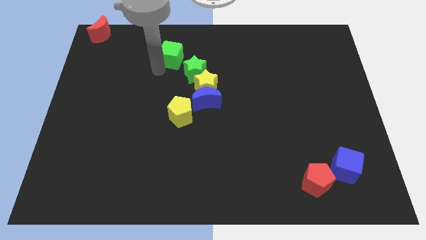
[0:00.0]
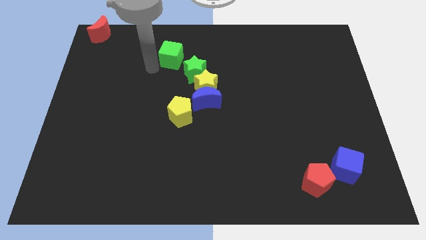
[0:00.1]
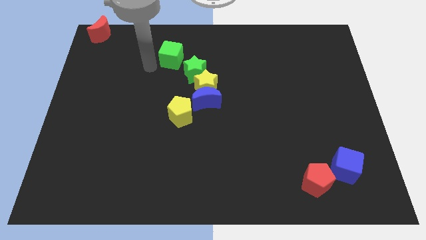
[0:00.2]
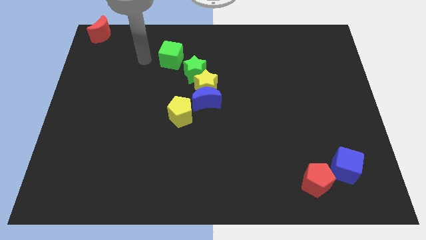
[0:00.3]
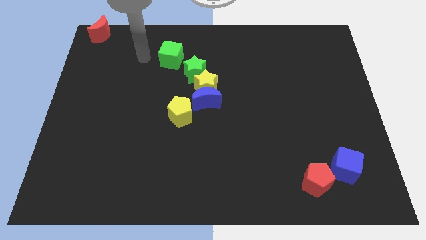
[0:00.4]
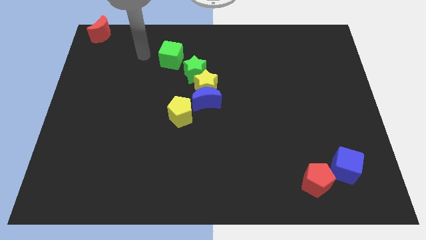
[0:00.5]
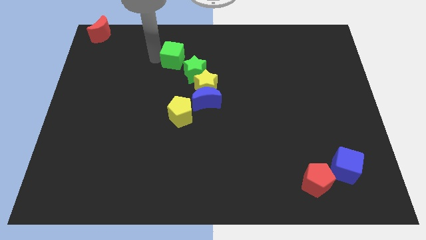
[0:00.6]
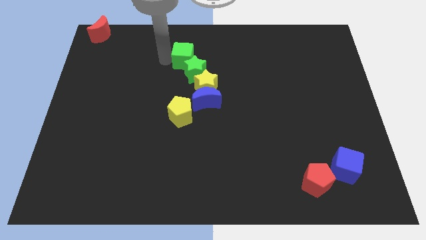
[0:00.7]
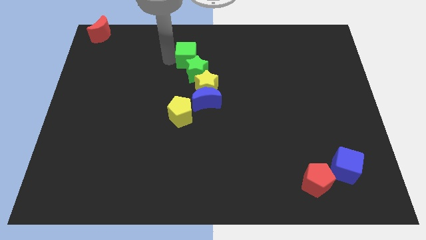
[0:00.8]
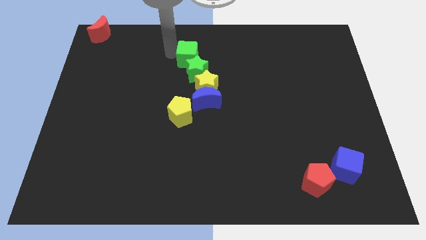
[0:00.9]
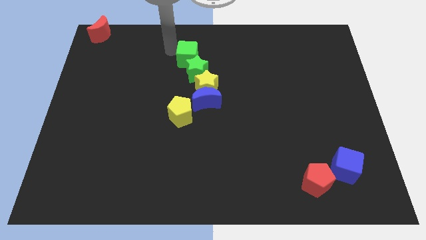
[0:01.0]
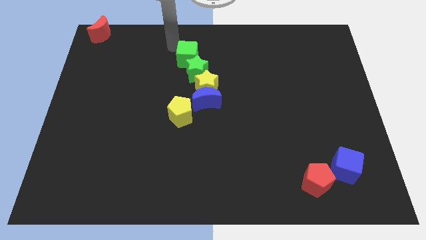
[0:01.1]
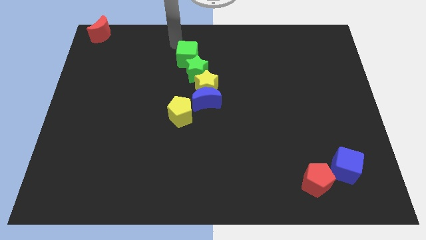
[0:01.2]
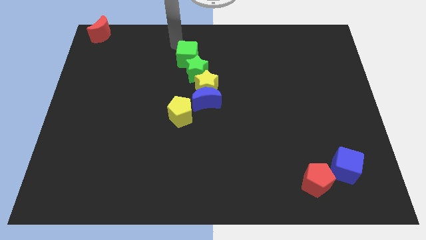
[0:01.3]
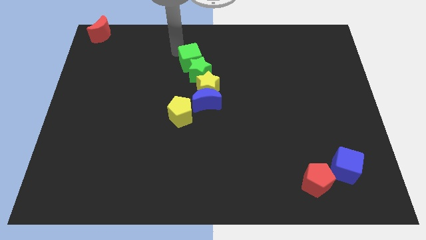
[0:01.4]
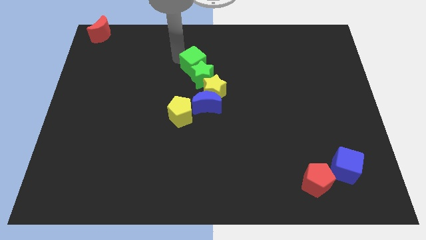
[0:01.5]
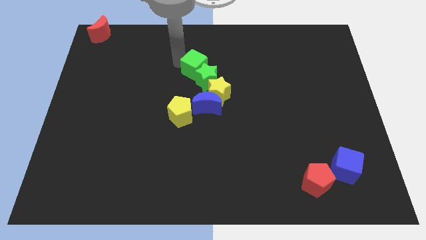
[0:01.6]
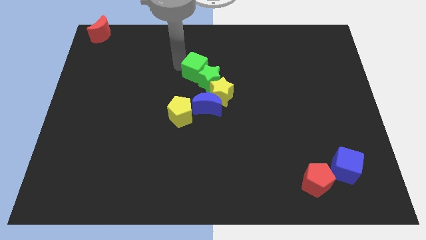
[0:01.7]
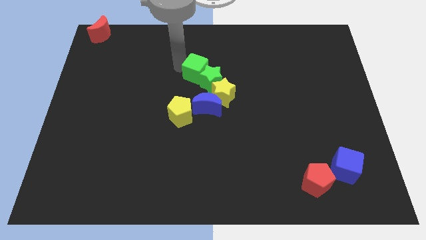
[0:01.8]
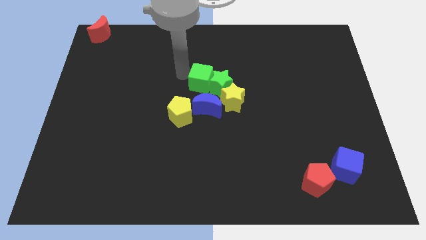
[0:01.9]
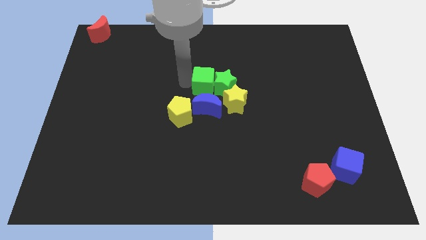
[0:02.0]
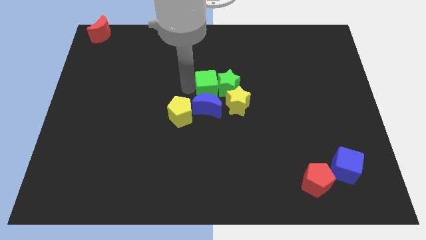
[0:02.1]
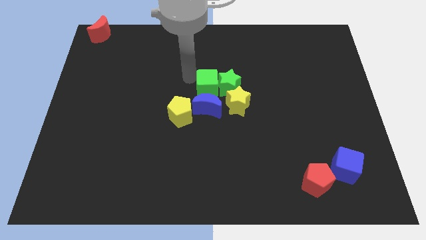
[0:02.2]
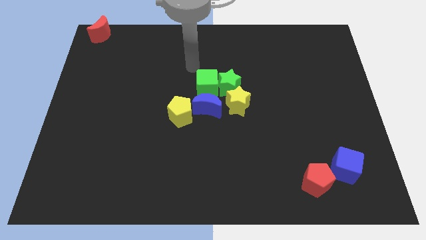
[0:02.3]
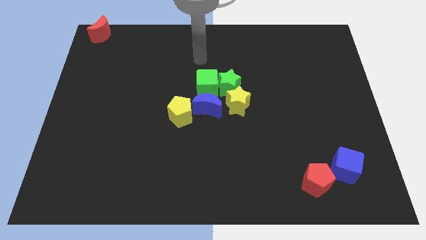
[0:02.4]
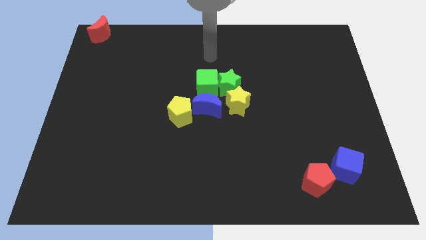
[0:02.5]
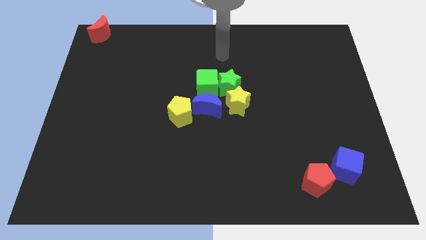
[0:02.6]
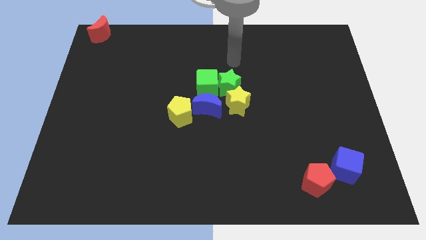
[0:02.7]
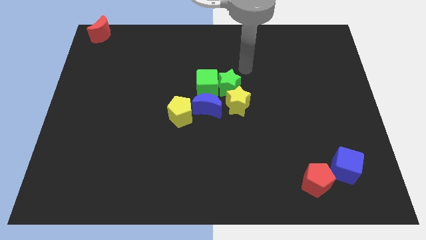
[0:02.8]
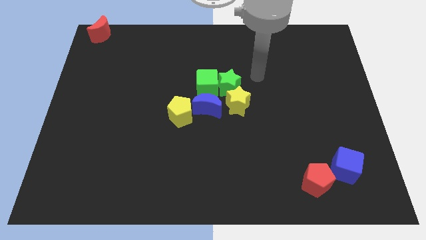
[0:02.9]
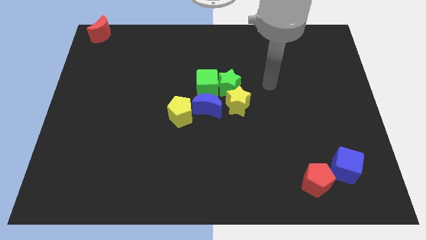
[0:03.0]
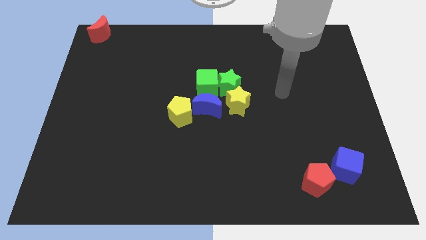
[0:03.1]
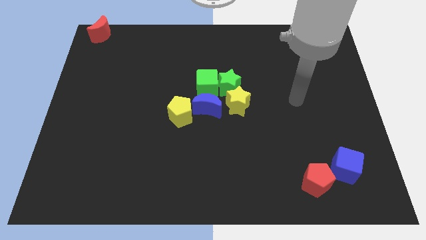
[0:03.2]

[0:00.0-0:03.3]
push the group of blocks at the center into the blue moon

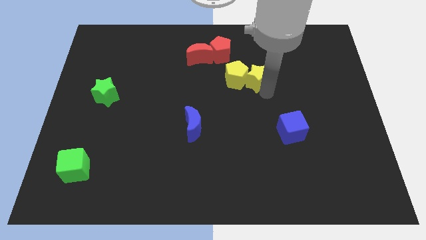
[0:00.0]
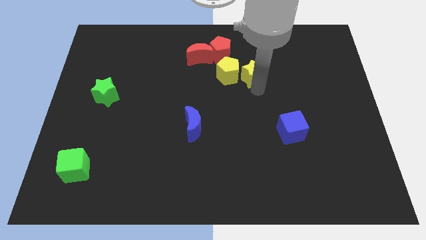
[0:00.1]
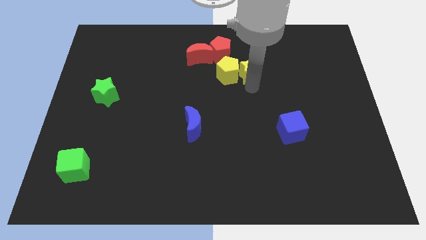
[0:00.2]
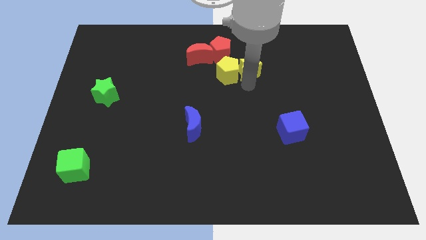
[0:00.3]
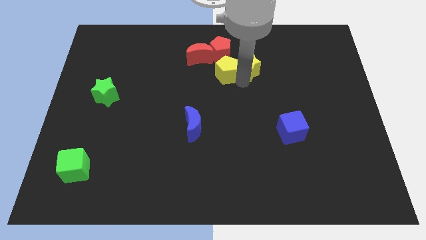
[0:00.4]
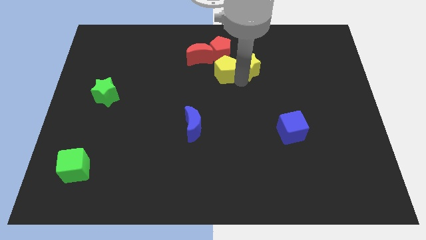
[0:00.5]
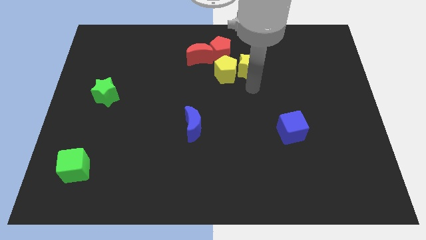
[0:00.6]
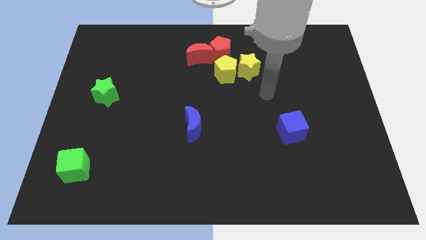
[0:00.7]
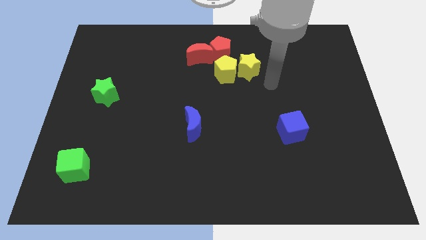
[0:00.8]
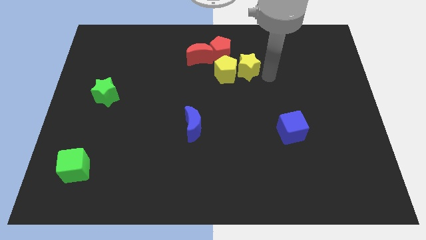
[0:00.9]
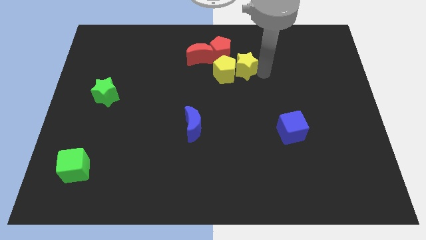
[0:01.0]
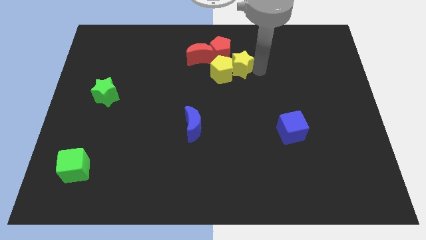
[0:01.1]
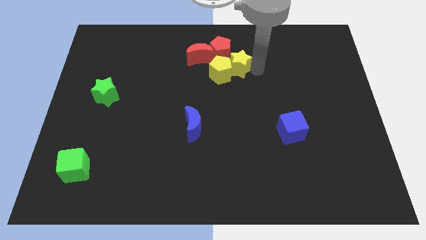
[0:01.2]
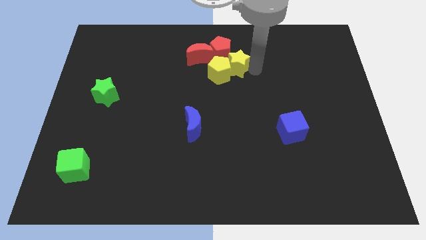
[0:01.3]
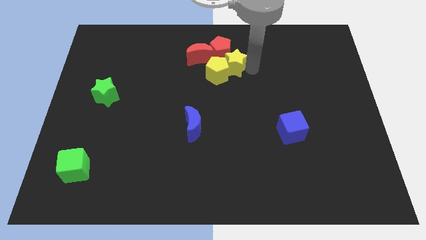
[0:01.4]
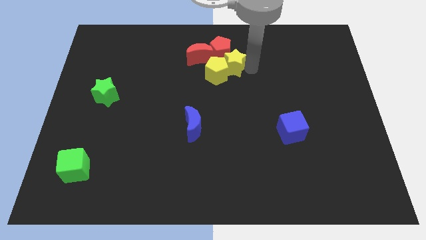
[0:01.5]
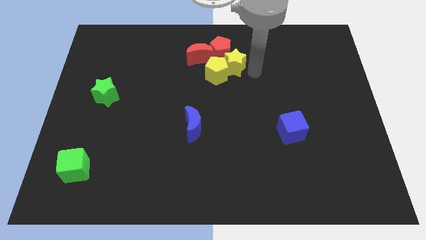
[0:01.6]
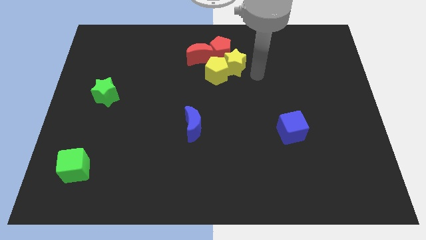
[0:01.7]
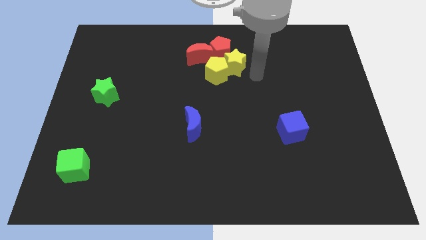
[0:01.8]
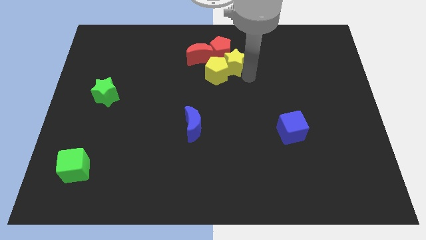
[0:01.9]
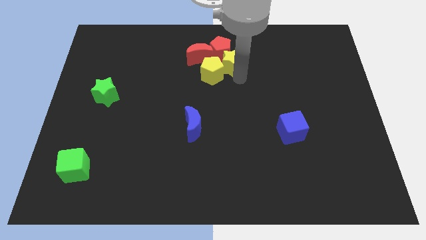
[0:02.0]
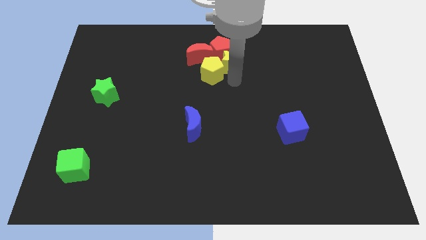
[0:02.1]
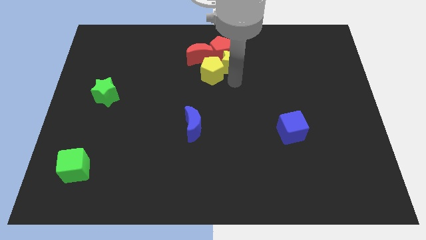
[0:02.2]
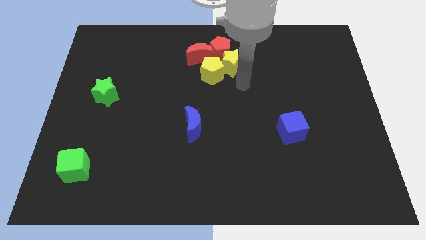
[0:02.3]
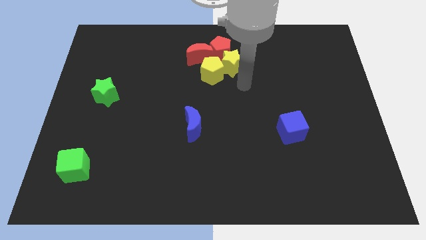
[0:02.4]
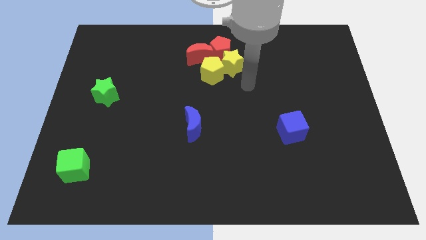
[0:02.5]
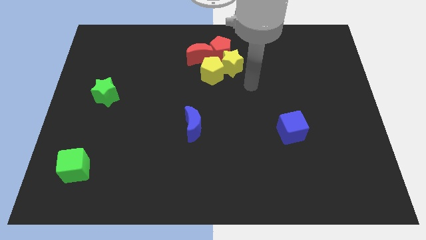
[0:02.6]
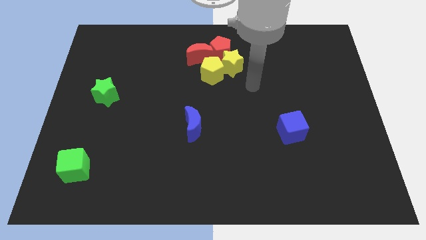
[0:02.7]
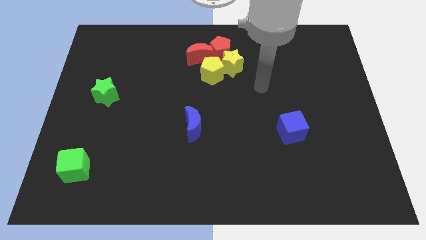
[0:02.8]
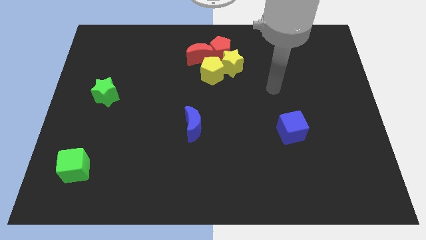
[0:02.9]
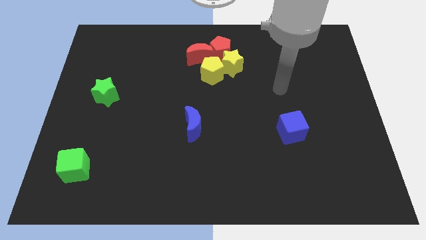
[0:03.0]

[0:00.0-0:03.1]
move the yellow star and yellow pentagon towards the red pentagon

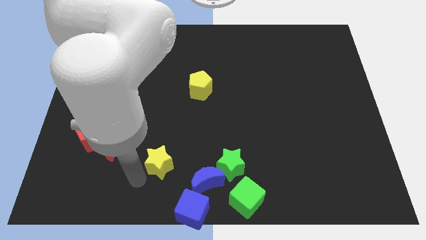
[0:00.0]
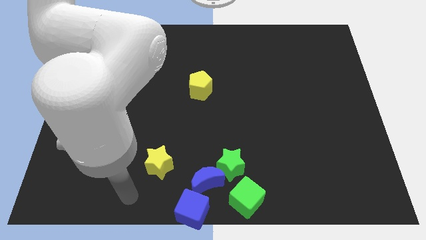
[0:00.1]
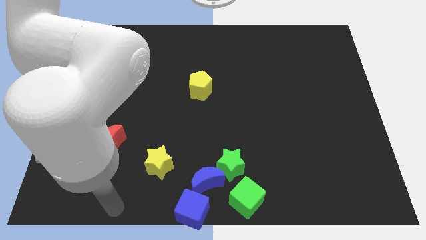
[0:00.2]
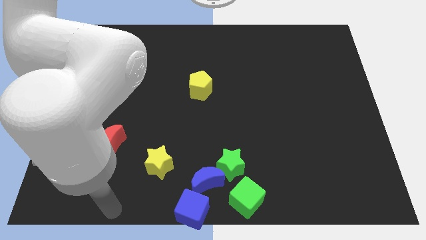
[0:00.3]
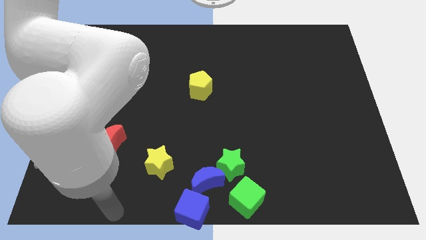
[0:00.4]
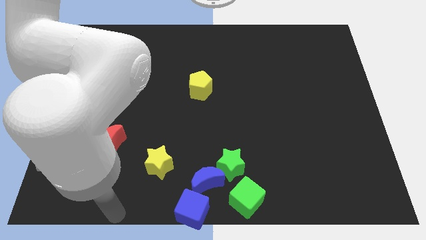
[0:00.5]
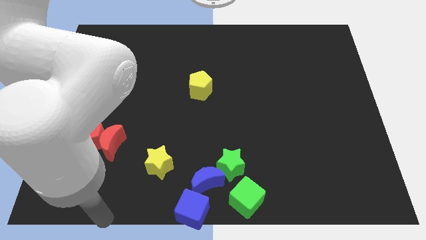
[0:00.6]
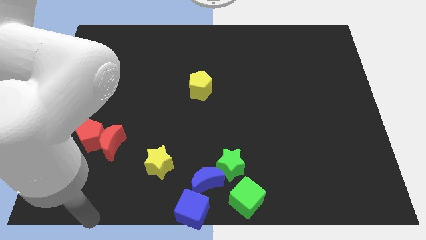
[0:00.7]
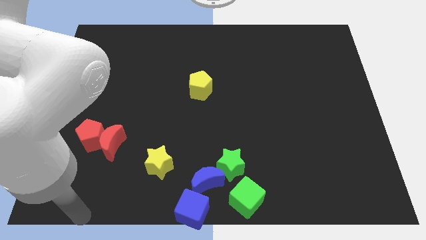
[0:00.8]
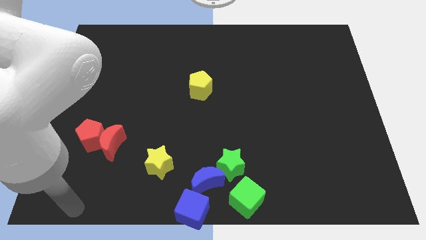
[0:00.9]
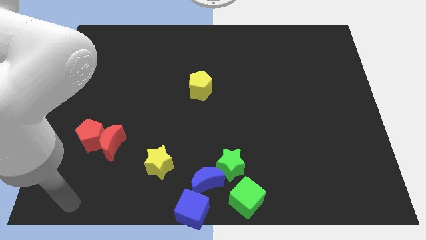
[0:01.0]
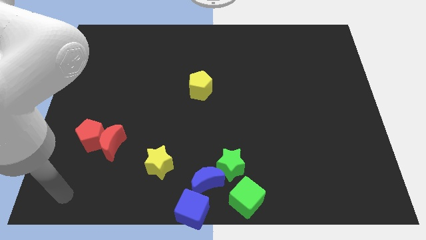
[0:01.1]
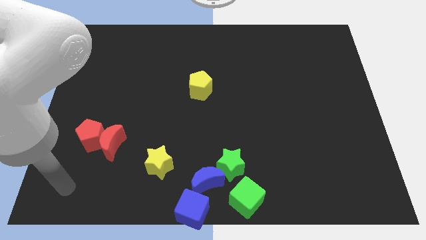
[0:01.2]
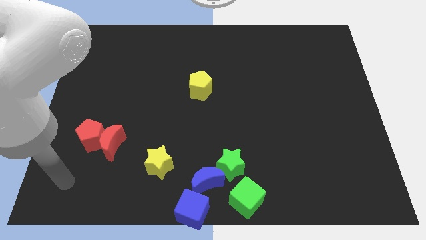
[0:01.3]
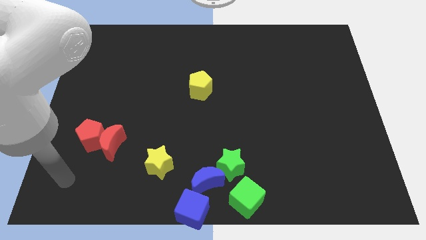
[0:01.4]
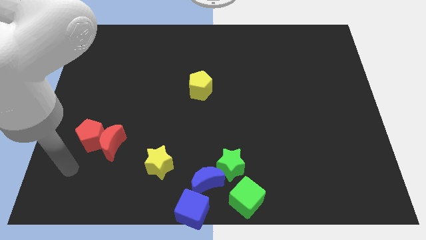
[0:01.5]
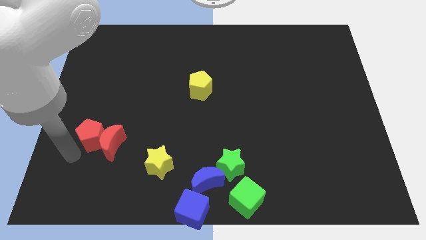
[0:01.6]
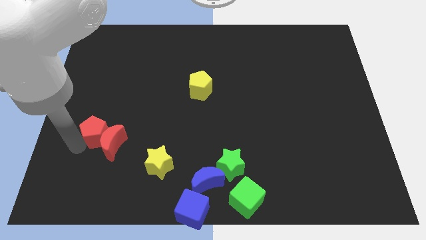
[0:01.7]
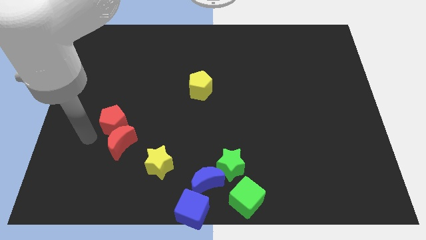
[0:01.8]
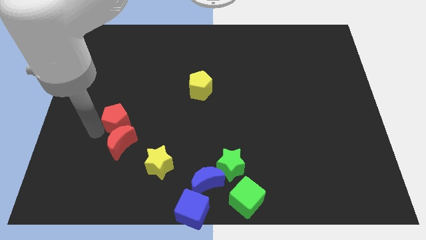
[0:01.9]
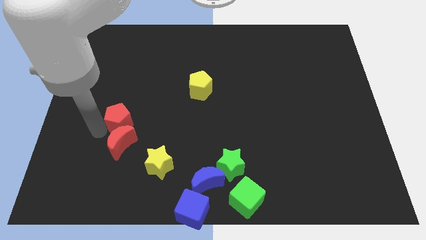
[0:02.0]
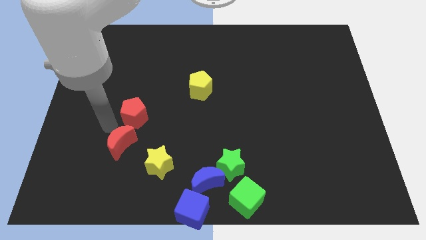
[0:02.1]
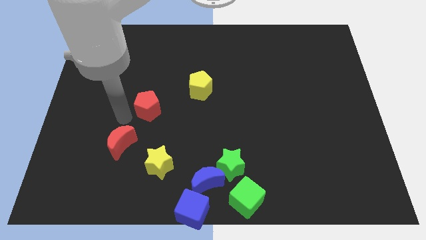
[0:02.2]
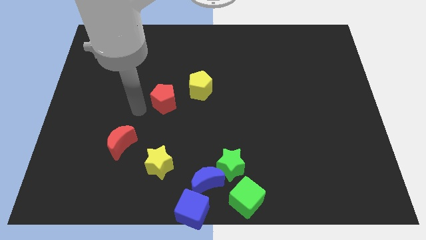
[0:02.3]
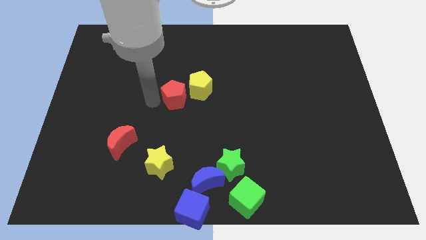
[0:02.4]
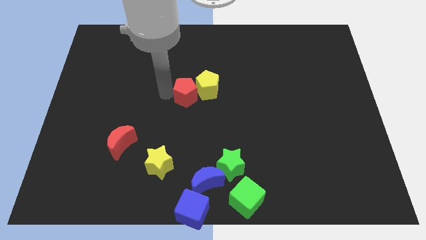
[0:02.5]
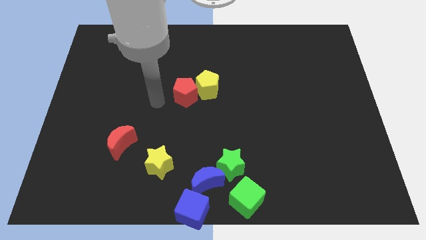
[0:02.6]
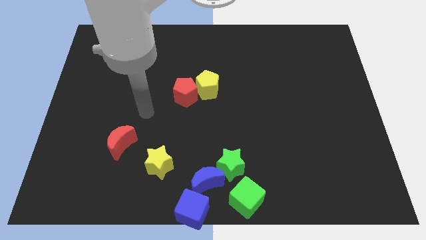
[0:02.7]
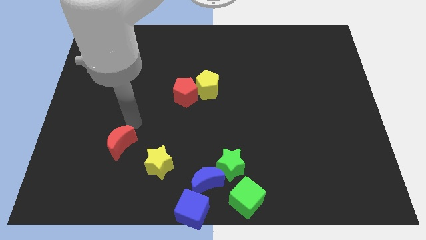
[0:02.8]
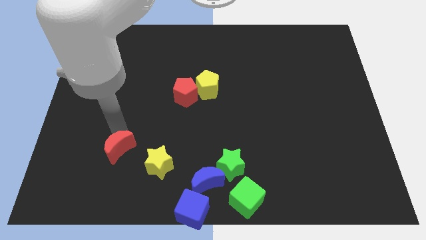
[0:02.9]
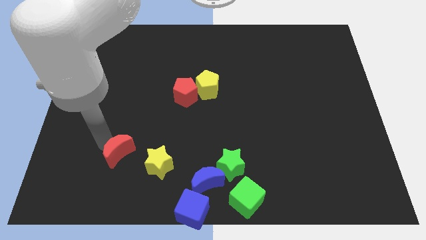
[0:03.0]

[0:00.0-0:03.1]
move the red pentagon left to the yellow pentagon
